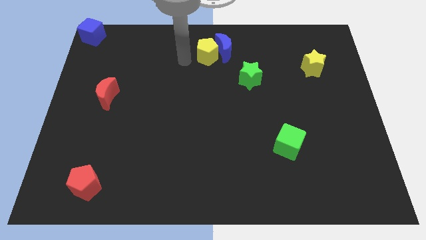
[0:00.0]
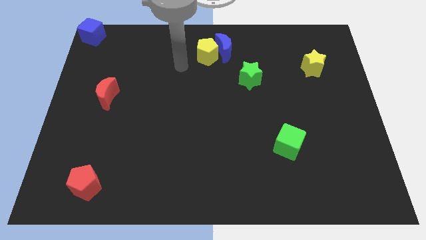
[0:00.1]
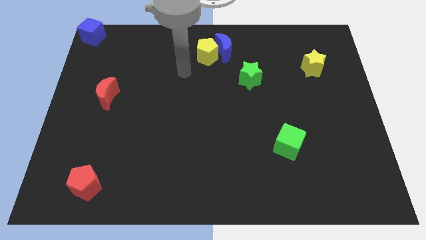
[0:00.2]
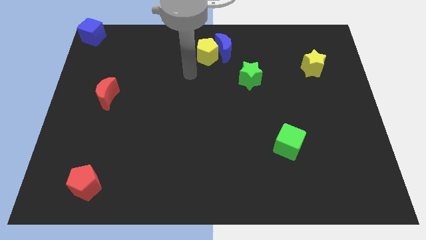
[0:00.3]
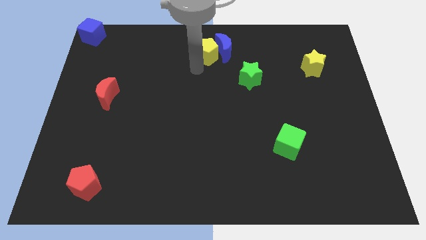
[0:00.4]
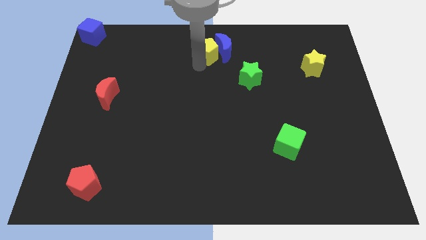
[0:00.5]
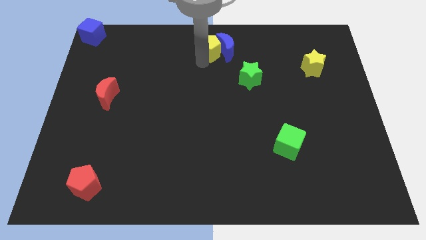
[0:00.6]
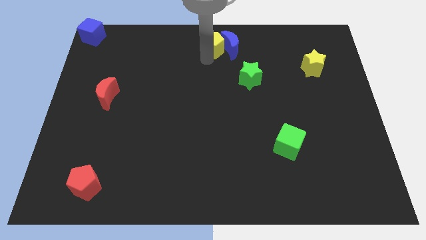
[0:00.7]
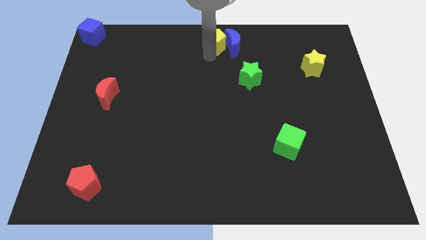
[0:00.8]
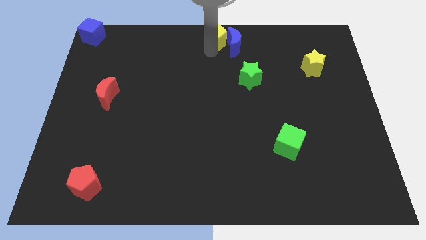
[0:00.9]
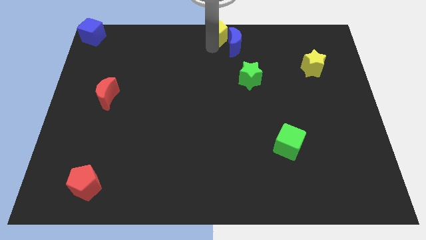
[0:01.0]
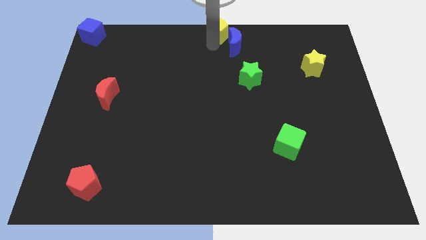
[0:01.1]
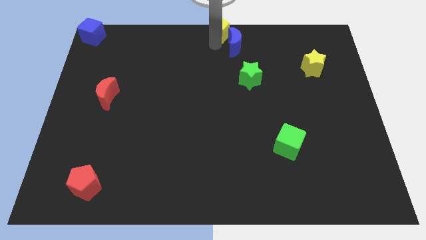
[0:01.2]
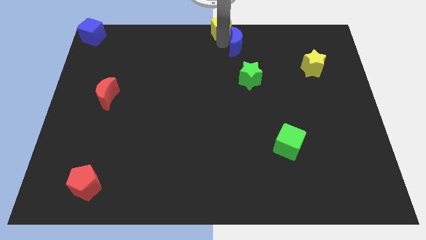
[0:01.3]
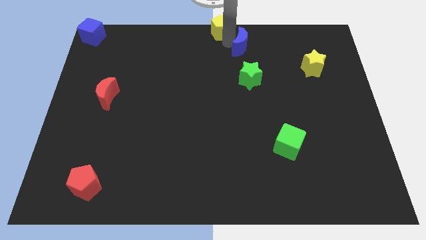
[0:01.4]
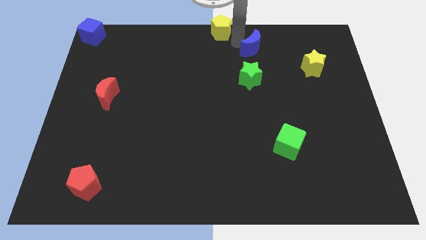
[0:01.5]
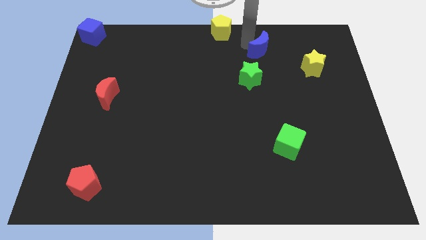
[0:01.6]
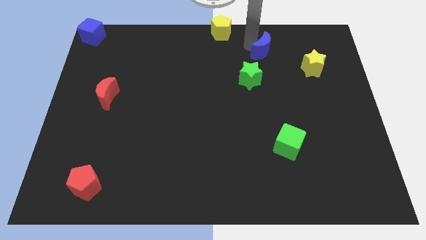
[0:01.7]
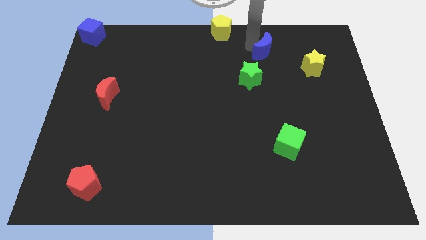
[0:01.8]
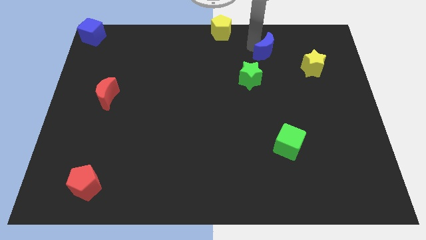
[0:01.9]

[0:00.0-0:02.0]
slide the yellow pentagon towards top middle of the board

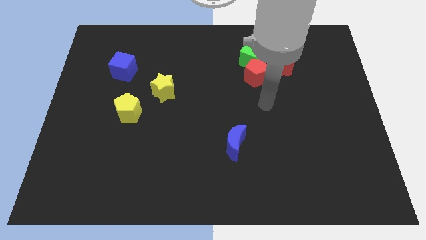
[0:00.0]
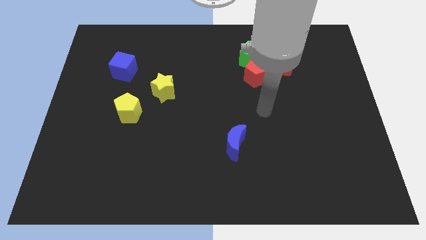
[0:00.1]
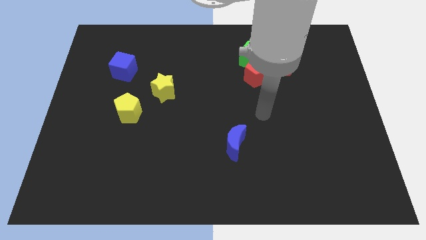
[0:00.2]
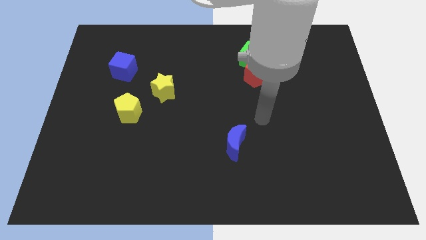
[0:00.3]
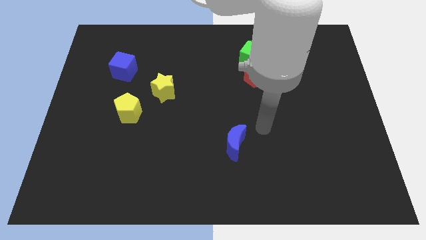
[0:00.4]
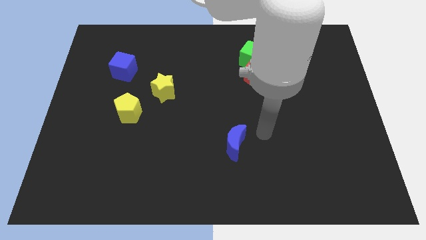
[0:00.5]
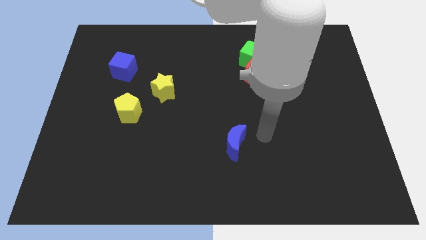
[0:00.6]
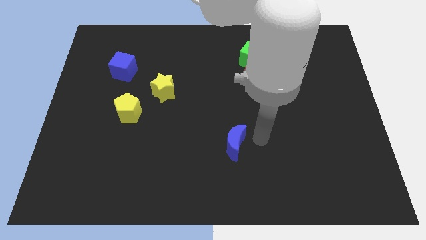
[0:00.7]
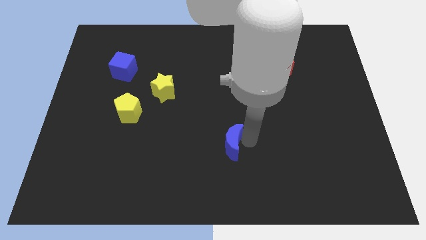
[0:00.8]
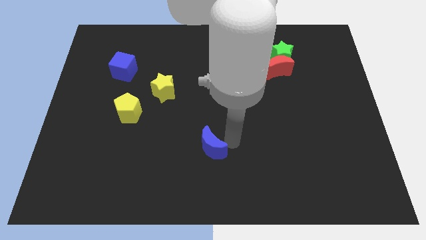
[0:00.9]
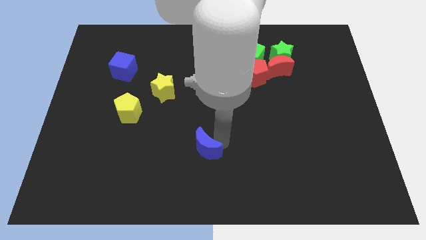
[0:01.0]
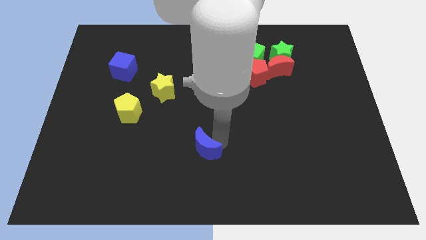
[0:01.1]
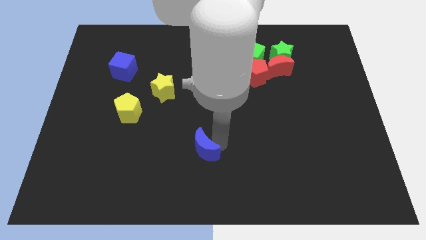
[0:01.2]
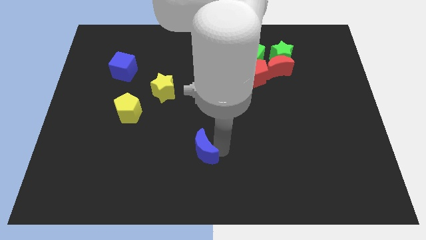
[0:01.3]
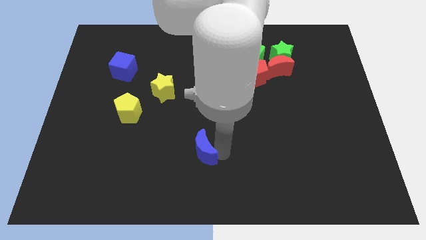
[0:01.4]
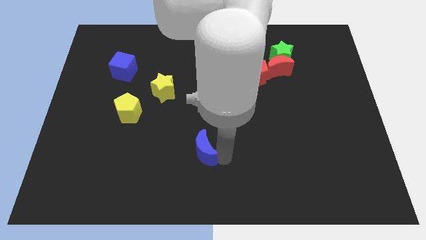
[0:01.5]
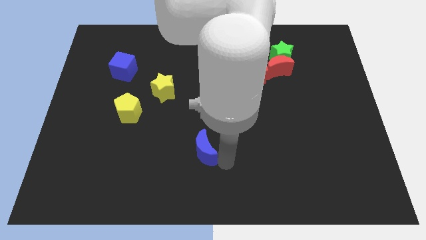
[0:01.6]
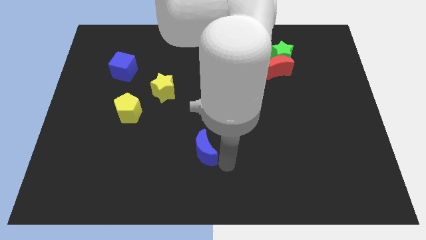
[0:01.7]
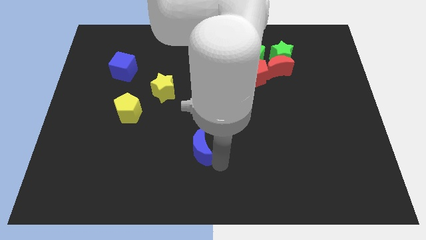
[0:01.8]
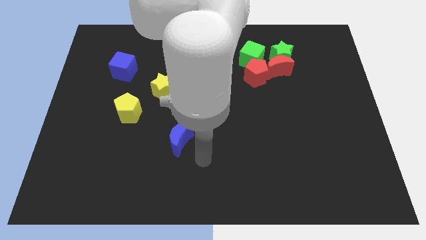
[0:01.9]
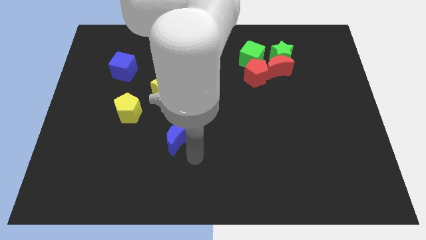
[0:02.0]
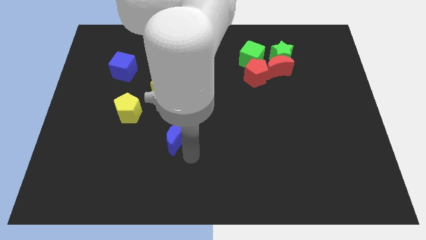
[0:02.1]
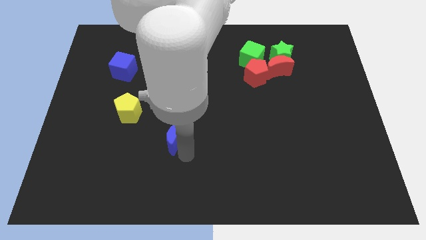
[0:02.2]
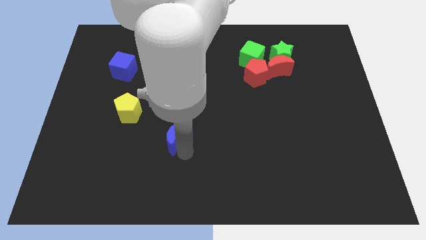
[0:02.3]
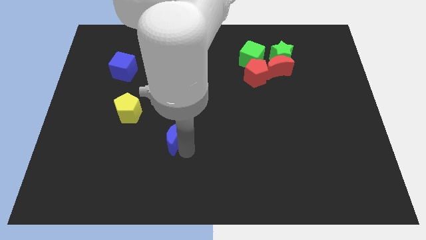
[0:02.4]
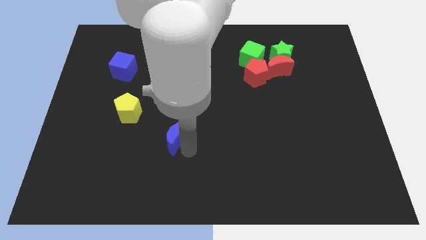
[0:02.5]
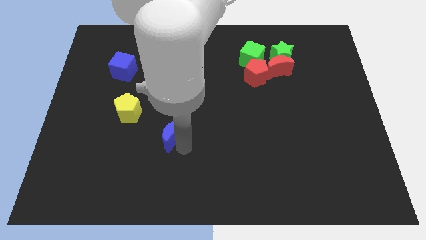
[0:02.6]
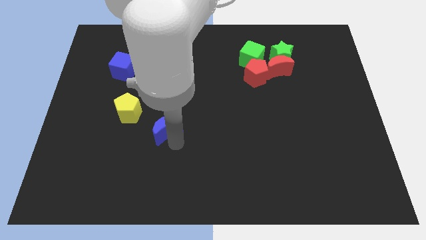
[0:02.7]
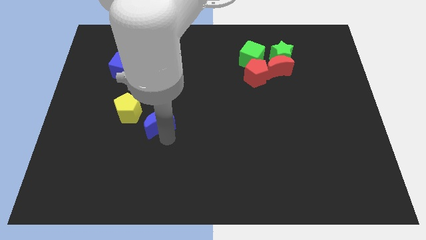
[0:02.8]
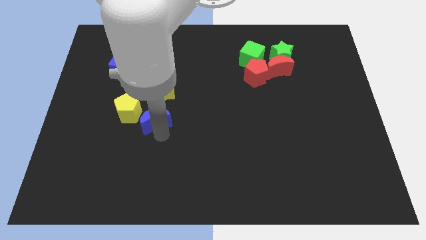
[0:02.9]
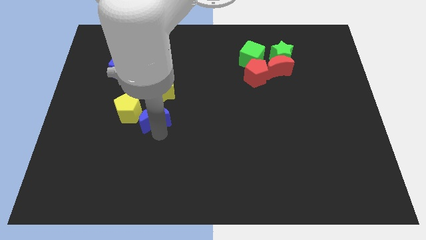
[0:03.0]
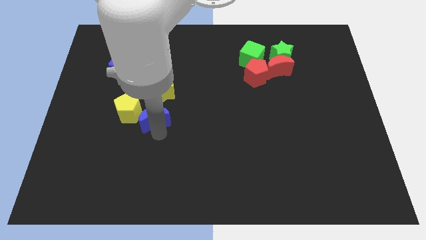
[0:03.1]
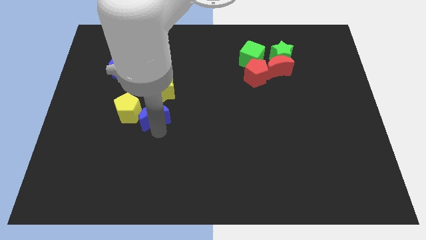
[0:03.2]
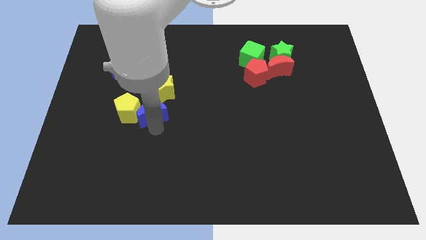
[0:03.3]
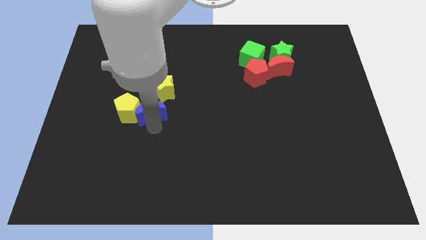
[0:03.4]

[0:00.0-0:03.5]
move the blue crescent towards the yellow pentagon

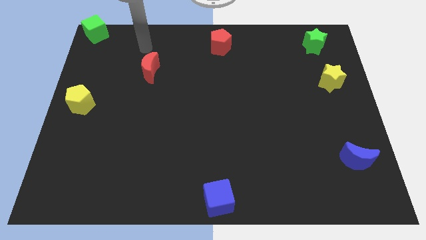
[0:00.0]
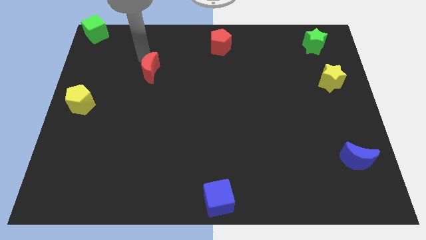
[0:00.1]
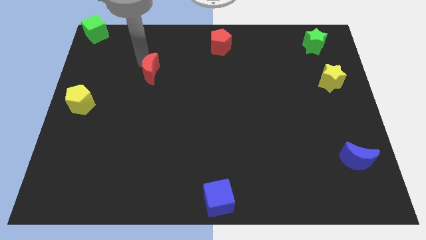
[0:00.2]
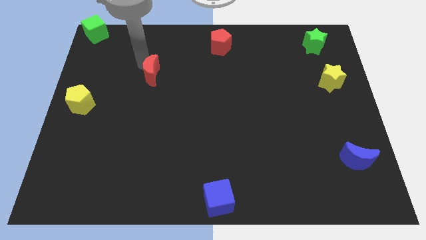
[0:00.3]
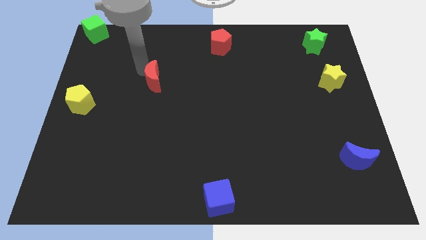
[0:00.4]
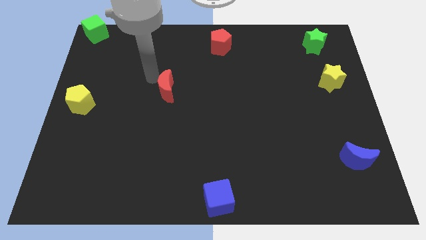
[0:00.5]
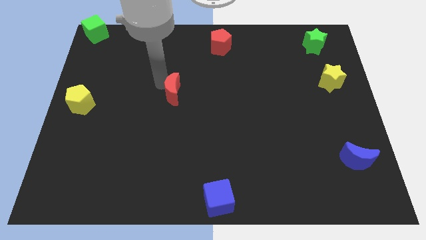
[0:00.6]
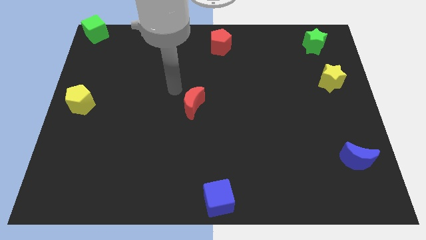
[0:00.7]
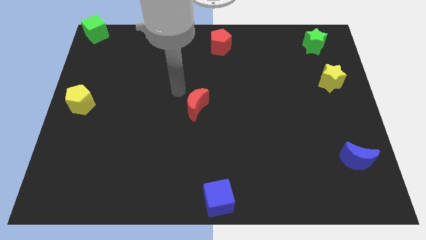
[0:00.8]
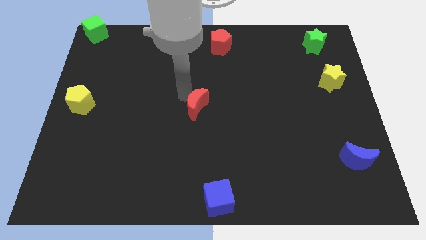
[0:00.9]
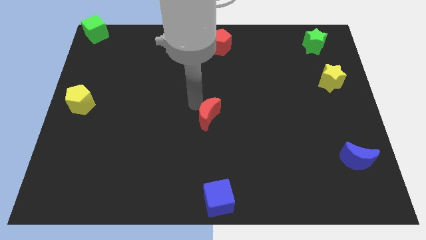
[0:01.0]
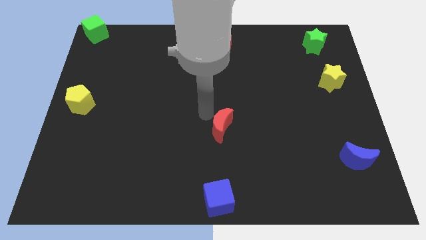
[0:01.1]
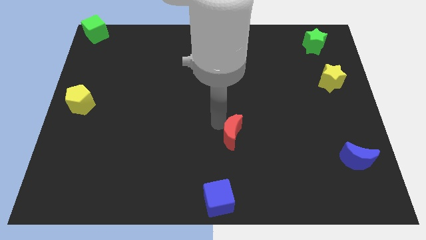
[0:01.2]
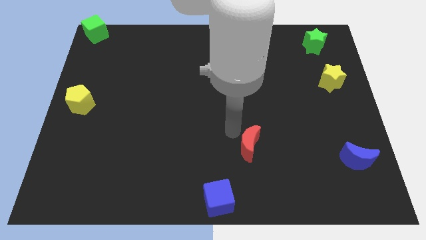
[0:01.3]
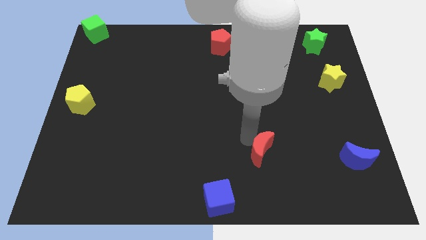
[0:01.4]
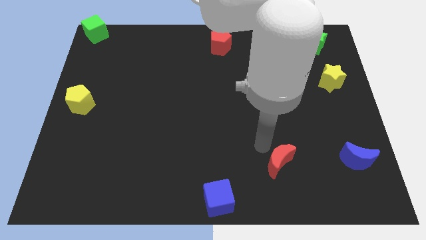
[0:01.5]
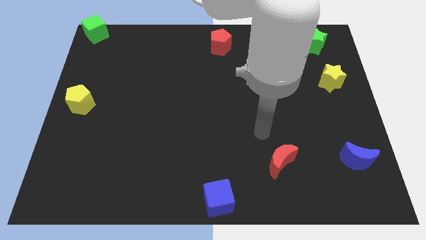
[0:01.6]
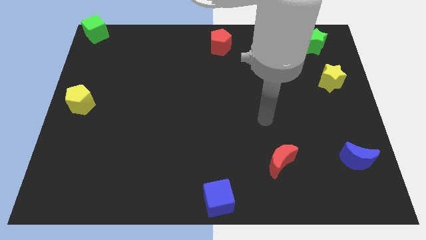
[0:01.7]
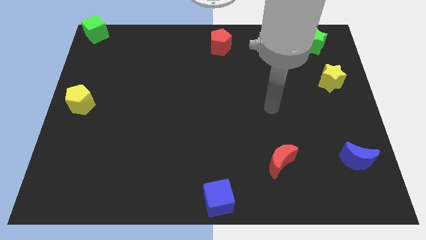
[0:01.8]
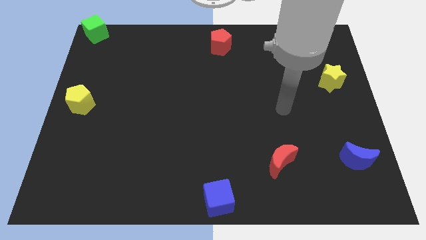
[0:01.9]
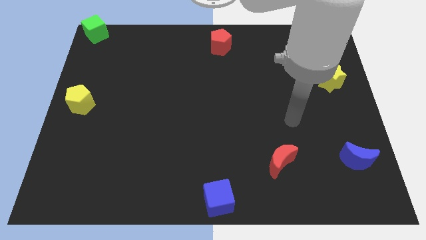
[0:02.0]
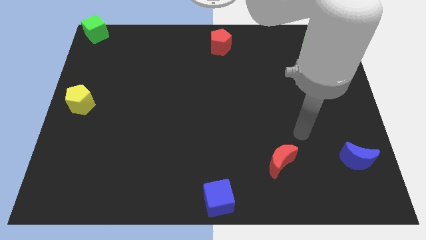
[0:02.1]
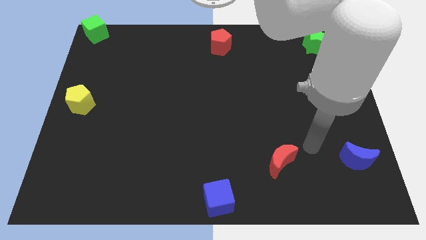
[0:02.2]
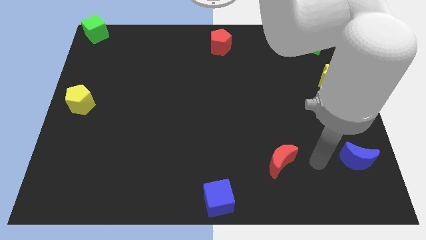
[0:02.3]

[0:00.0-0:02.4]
push the red crescent towards the bottom right corner

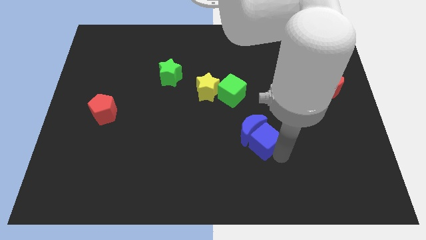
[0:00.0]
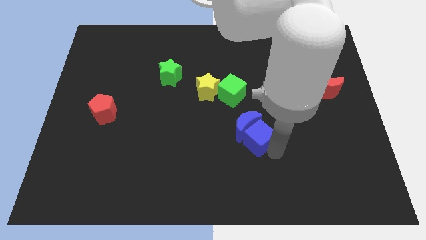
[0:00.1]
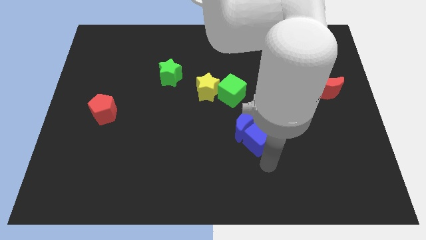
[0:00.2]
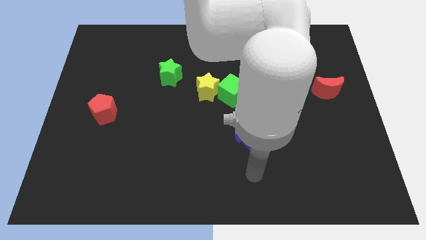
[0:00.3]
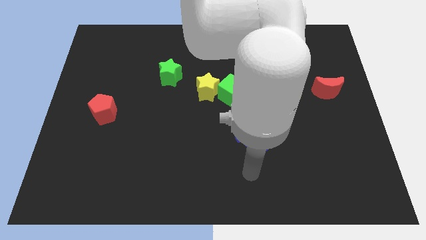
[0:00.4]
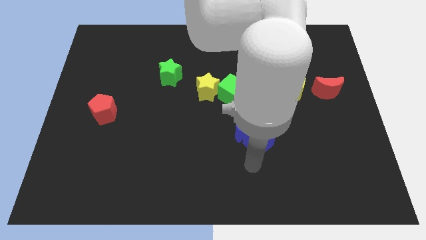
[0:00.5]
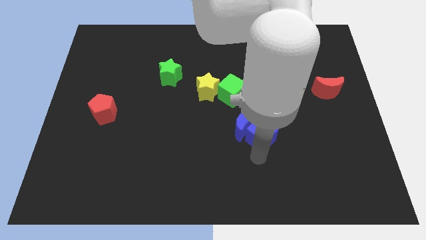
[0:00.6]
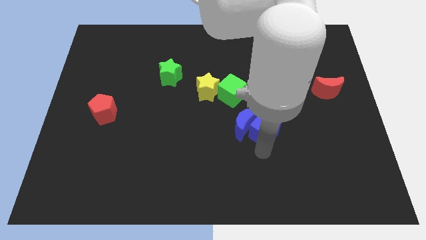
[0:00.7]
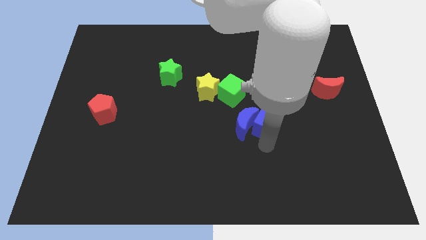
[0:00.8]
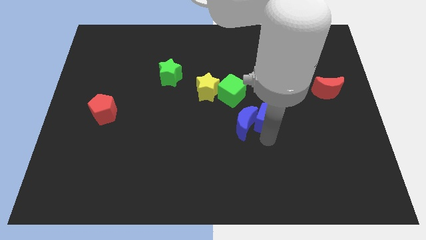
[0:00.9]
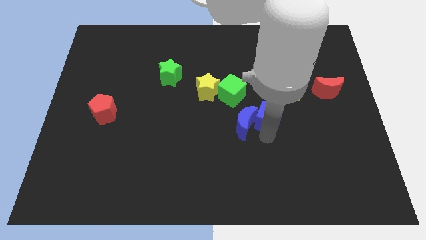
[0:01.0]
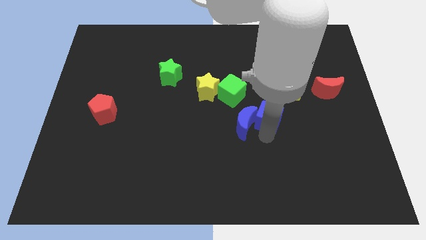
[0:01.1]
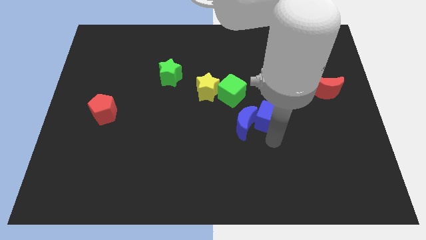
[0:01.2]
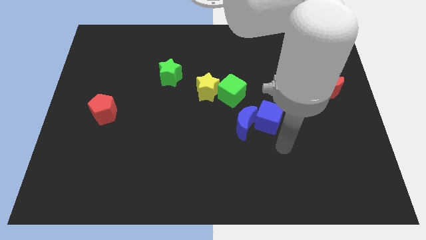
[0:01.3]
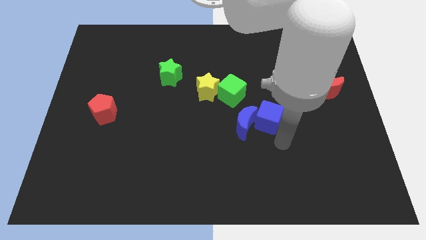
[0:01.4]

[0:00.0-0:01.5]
move the blue cube to the right side of the blue crescent
